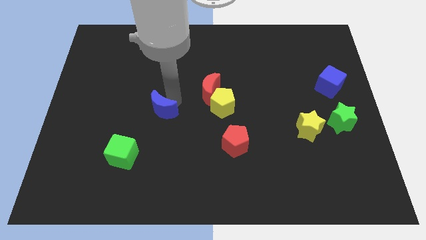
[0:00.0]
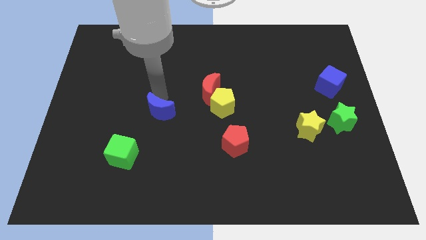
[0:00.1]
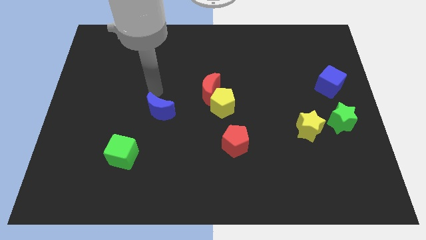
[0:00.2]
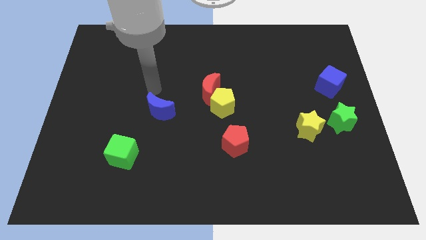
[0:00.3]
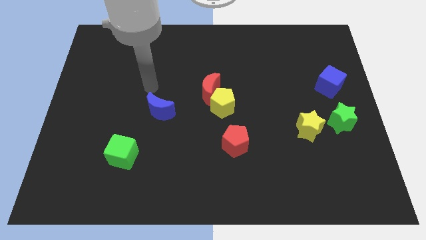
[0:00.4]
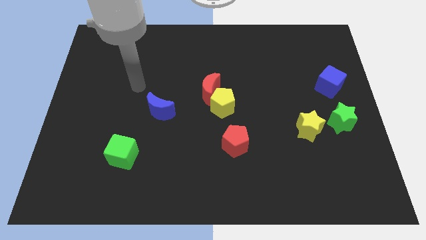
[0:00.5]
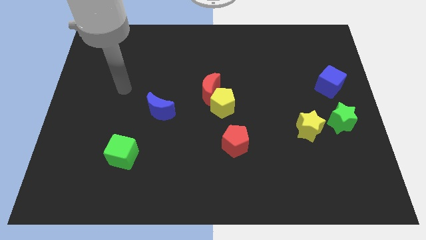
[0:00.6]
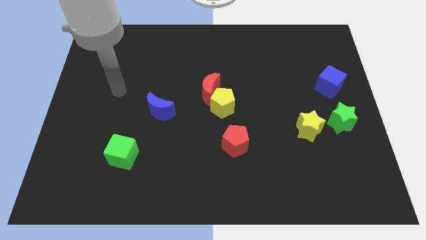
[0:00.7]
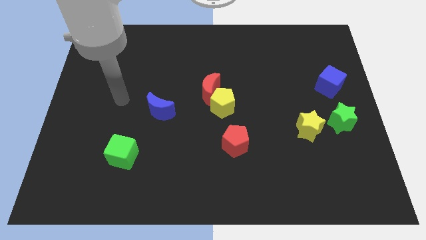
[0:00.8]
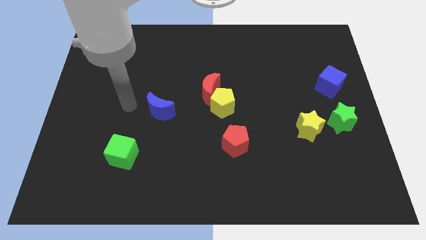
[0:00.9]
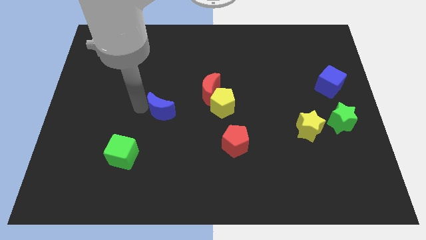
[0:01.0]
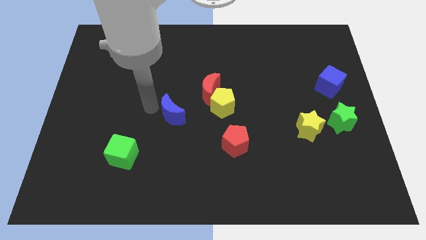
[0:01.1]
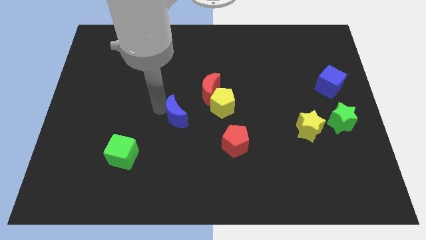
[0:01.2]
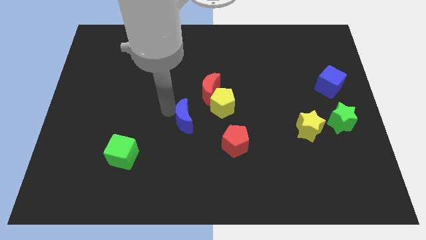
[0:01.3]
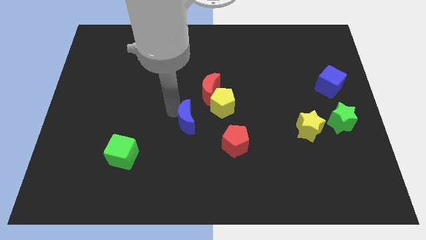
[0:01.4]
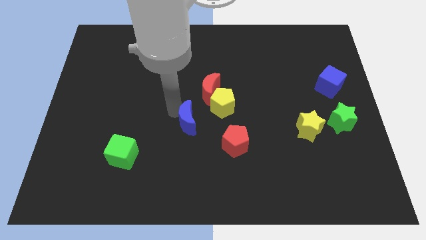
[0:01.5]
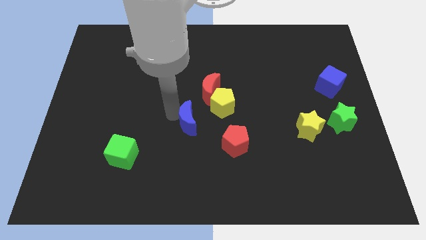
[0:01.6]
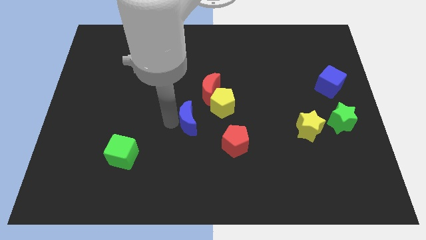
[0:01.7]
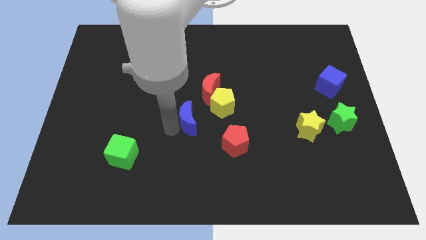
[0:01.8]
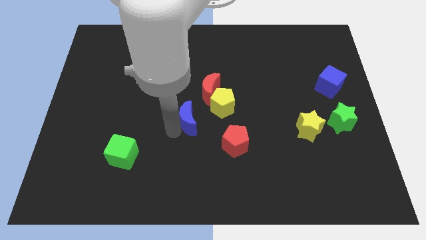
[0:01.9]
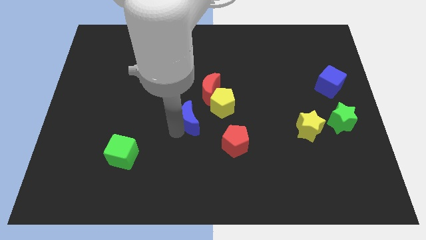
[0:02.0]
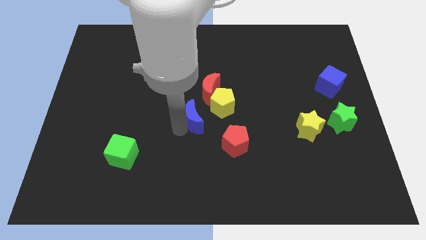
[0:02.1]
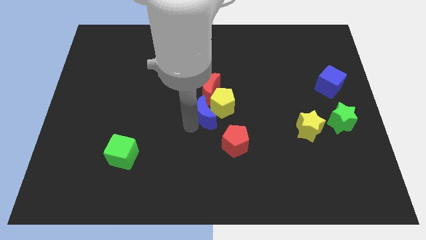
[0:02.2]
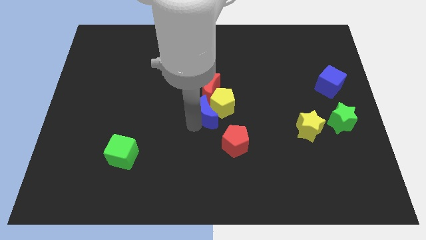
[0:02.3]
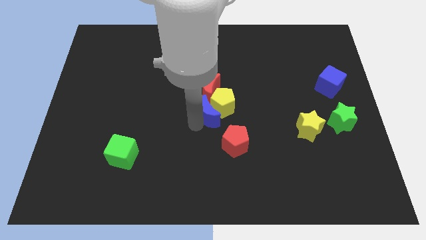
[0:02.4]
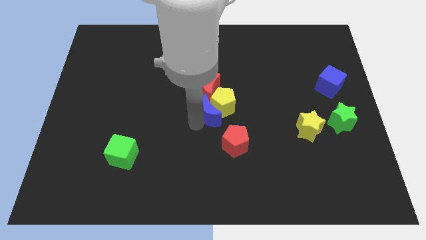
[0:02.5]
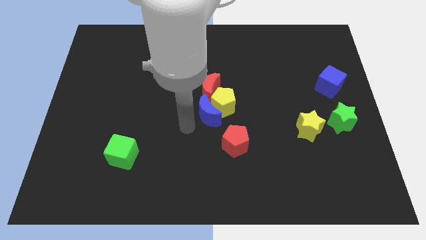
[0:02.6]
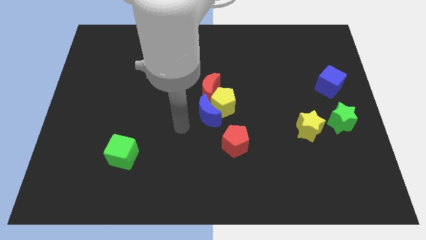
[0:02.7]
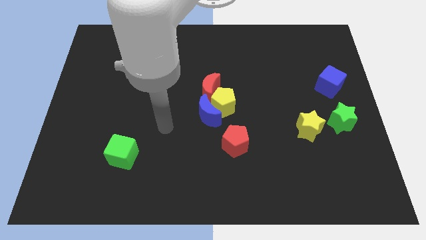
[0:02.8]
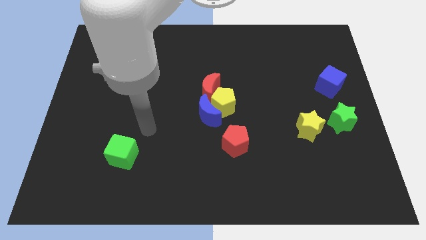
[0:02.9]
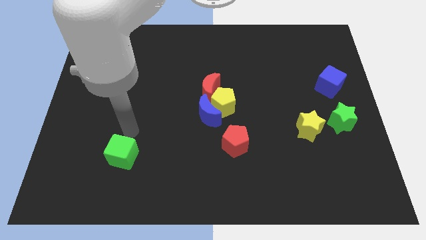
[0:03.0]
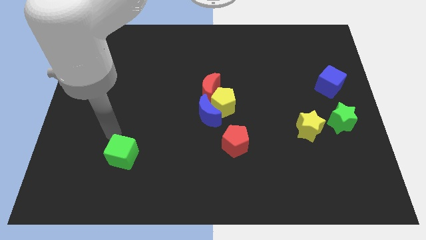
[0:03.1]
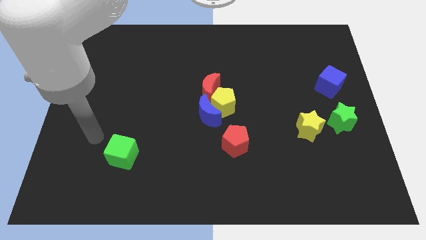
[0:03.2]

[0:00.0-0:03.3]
add blue moon to the group of blocks at the center of the board

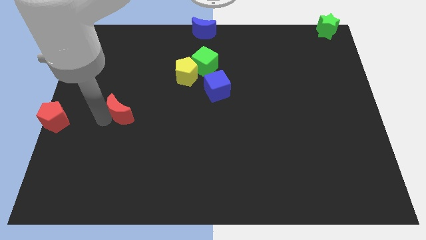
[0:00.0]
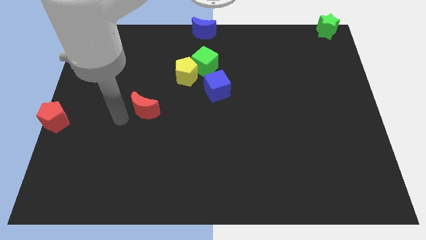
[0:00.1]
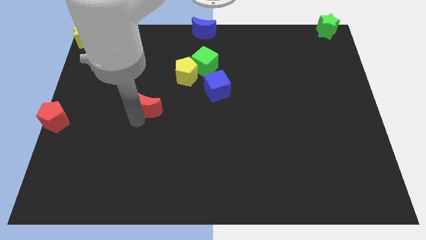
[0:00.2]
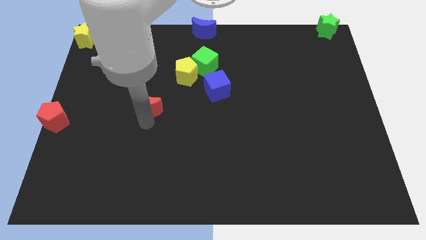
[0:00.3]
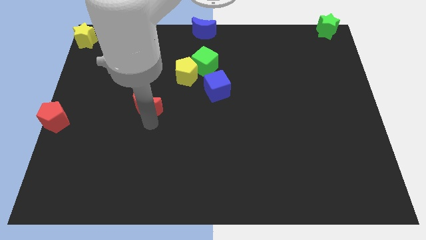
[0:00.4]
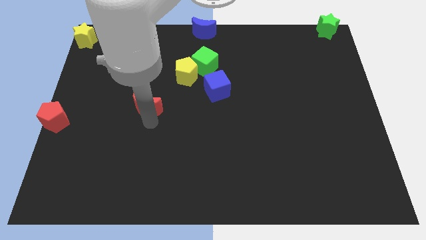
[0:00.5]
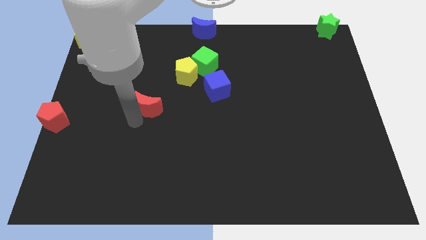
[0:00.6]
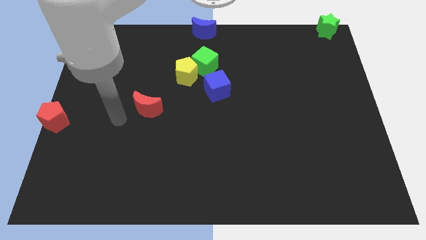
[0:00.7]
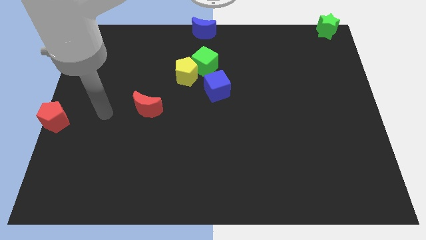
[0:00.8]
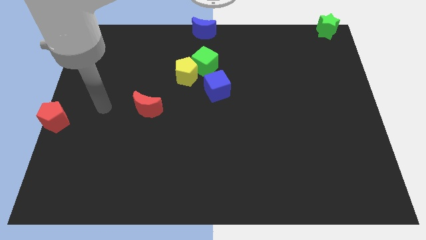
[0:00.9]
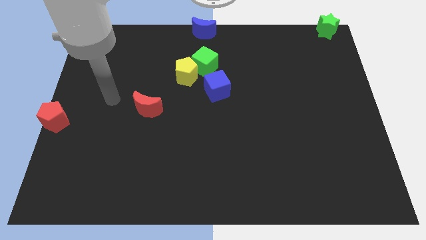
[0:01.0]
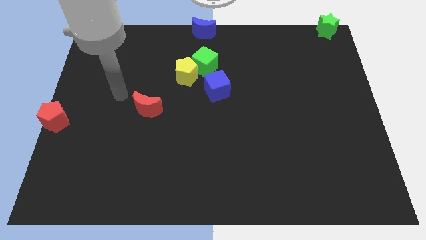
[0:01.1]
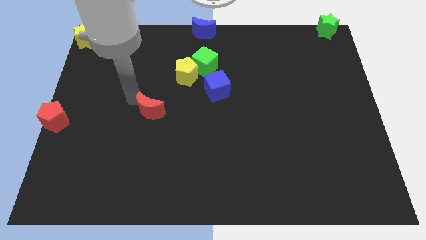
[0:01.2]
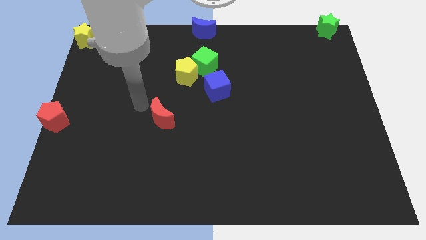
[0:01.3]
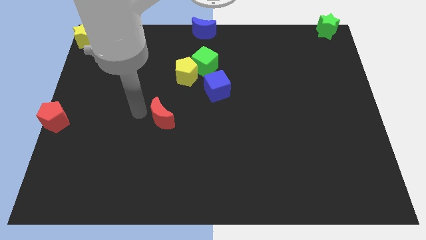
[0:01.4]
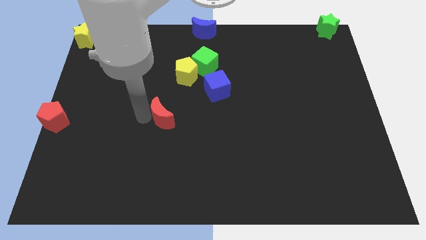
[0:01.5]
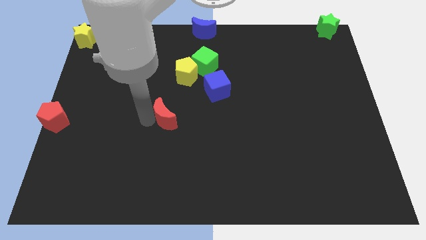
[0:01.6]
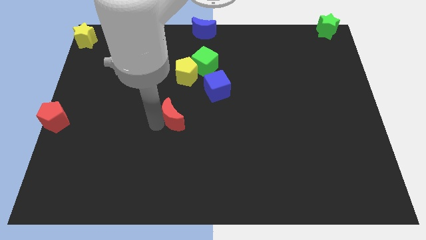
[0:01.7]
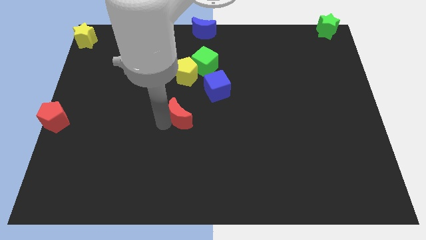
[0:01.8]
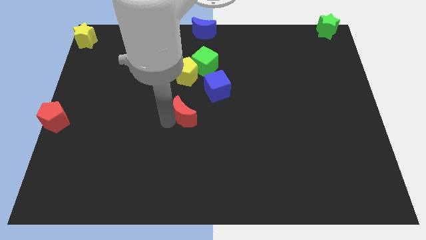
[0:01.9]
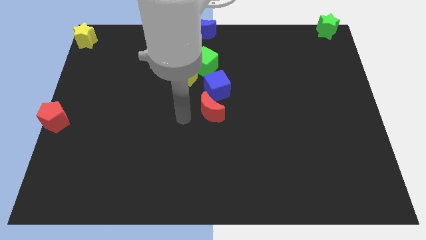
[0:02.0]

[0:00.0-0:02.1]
place the red moon at the center of the board

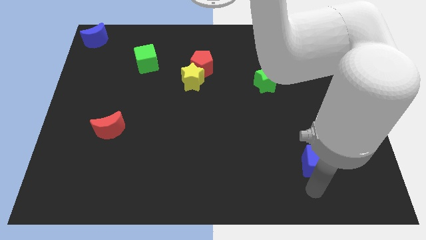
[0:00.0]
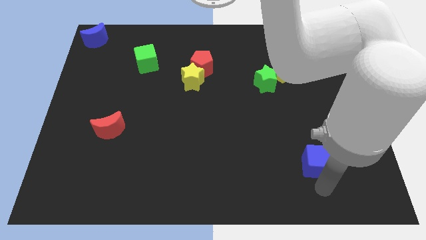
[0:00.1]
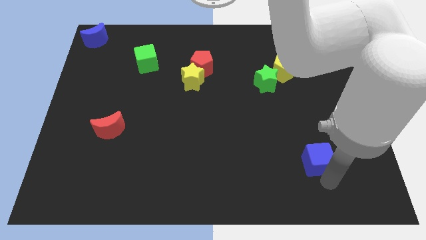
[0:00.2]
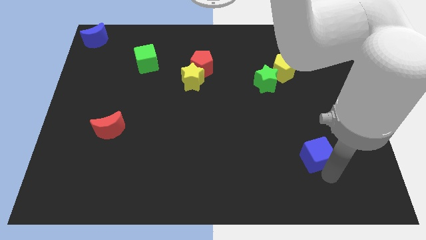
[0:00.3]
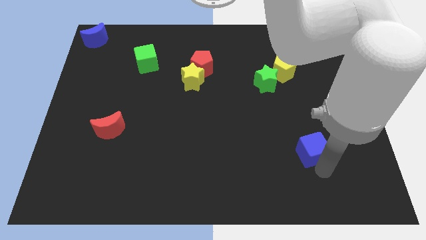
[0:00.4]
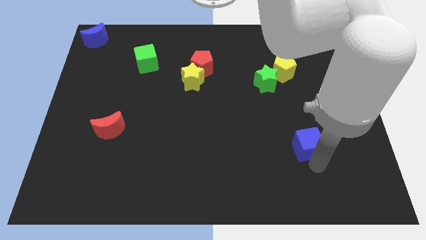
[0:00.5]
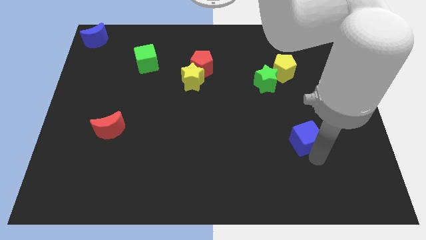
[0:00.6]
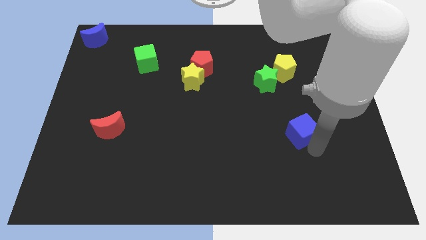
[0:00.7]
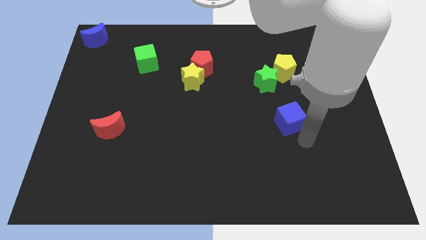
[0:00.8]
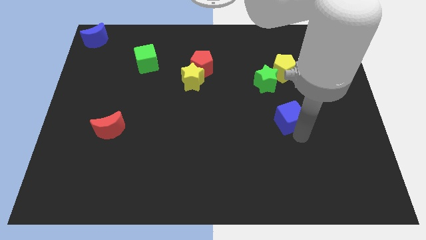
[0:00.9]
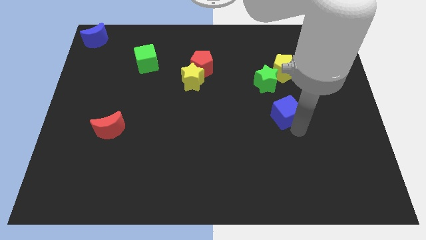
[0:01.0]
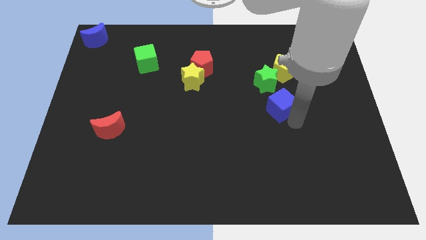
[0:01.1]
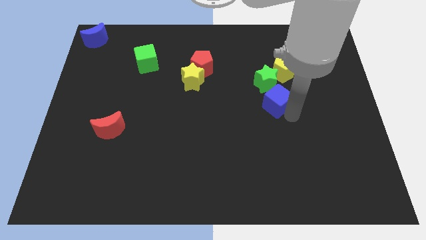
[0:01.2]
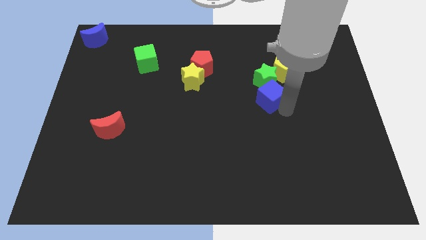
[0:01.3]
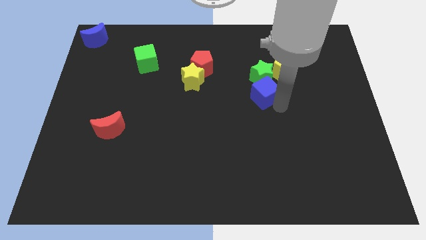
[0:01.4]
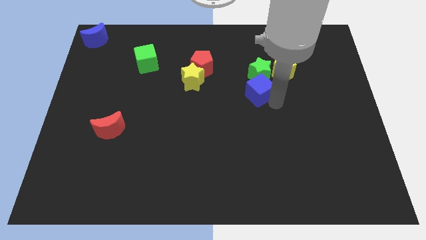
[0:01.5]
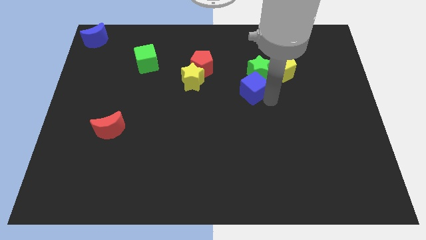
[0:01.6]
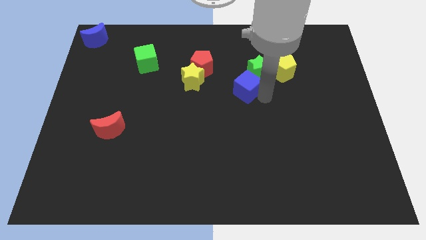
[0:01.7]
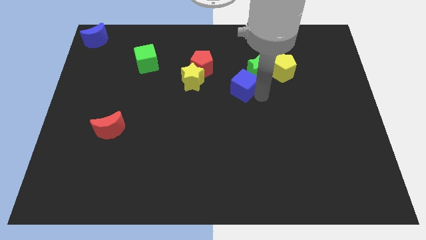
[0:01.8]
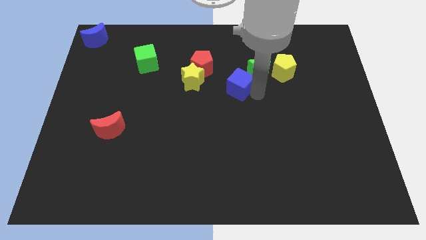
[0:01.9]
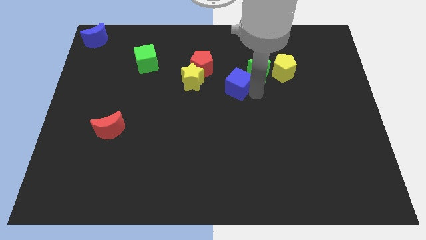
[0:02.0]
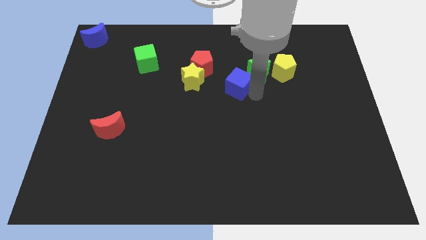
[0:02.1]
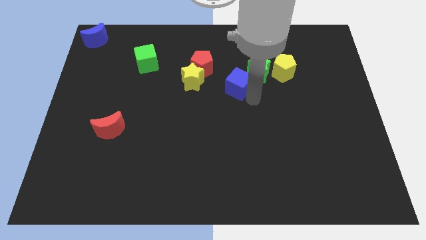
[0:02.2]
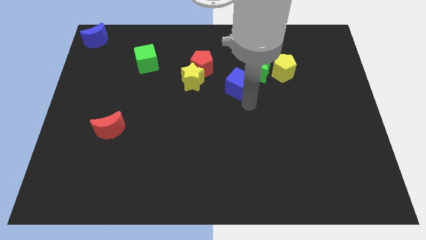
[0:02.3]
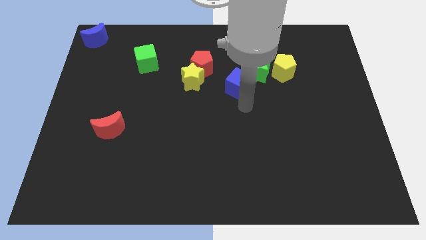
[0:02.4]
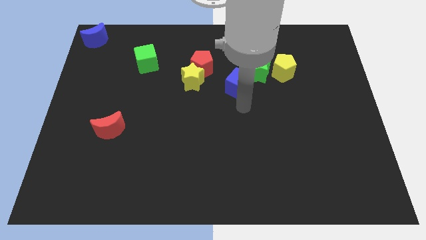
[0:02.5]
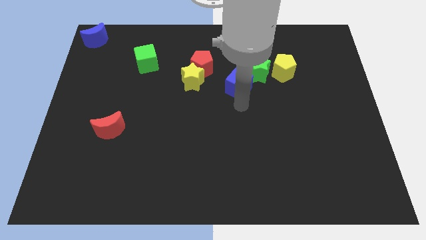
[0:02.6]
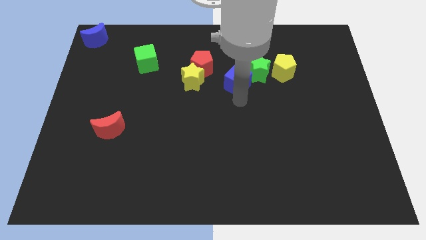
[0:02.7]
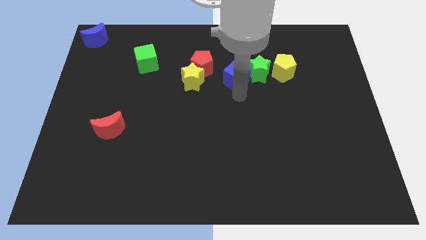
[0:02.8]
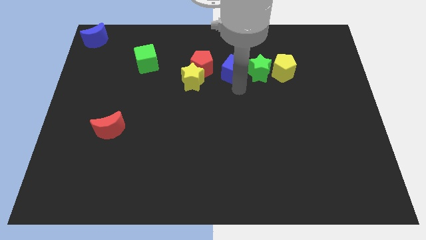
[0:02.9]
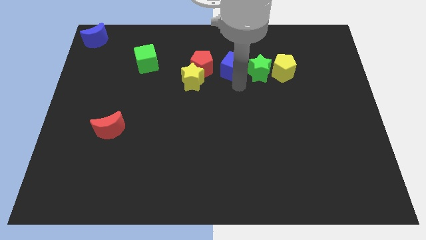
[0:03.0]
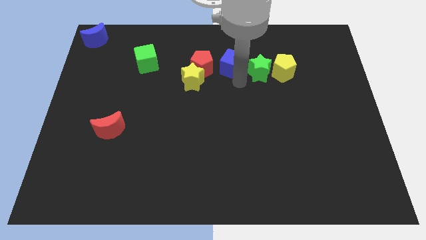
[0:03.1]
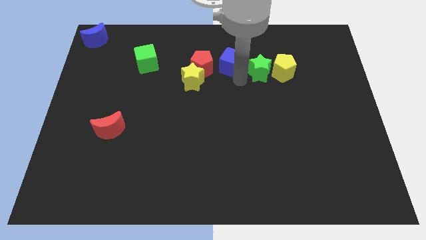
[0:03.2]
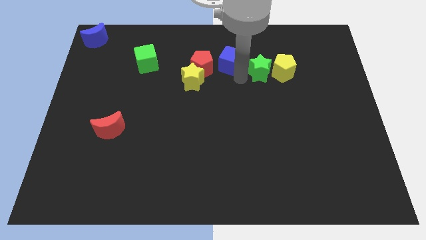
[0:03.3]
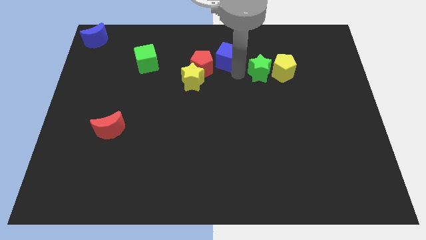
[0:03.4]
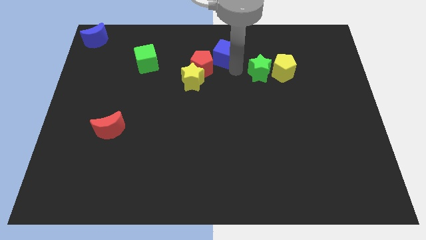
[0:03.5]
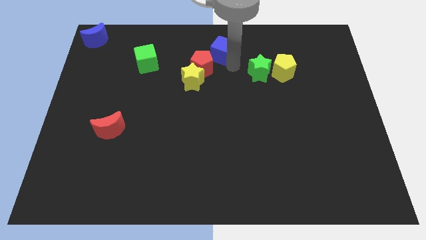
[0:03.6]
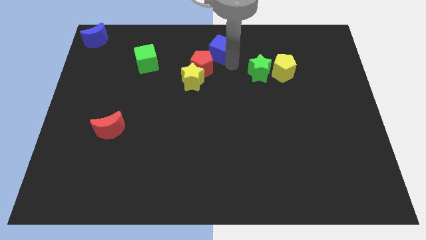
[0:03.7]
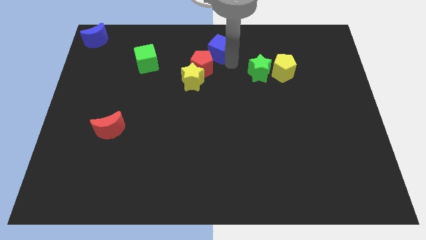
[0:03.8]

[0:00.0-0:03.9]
put the blue cube at the top right of the red pentagon
